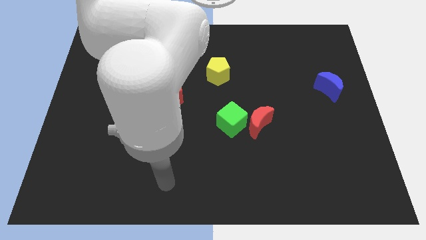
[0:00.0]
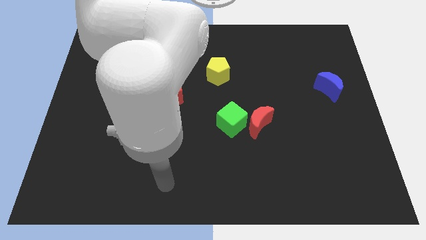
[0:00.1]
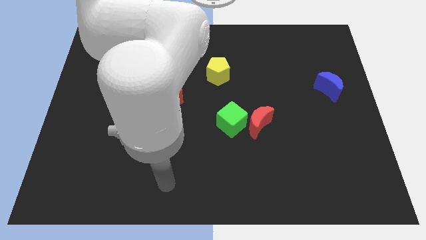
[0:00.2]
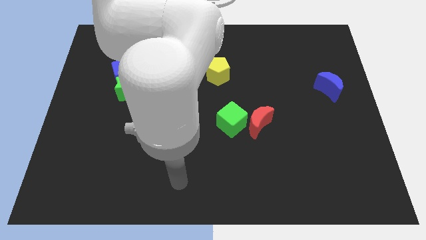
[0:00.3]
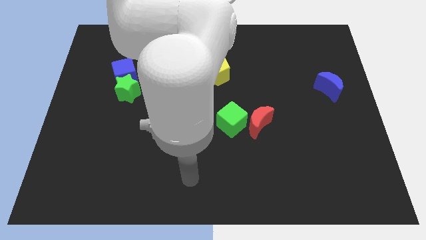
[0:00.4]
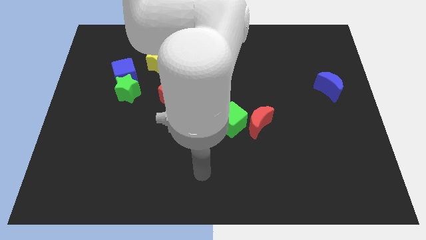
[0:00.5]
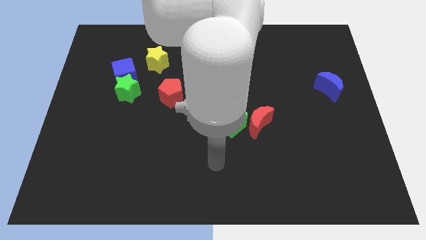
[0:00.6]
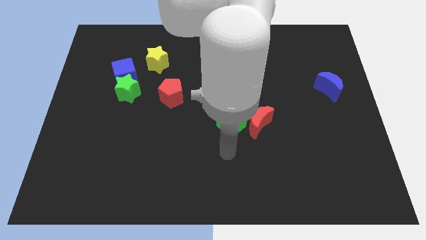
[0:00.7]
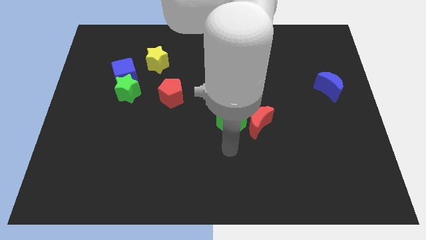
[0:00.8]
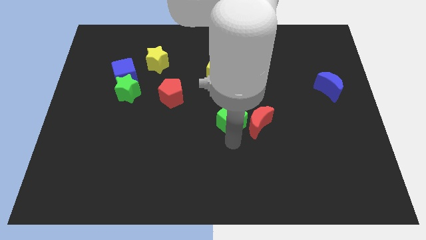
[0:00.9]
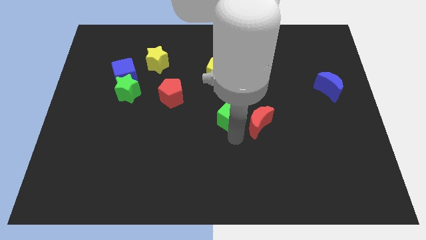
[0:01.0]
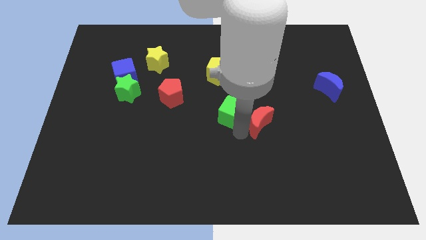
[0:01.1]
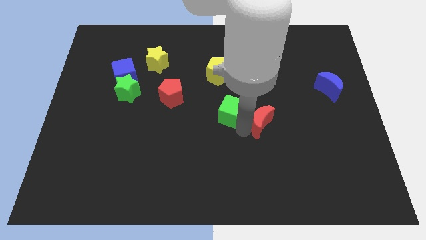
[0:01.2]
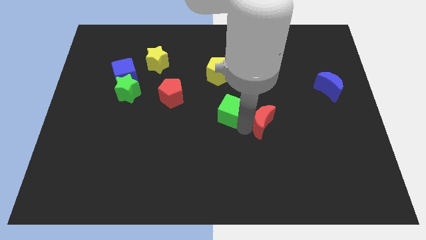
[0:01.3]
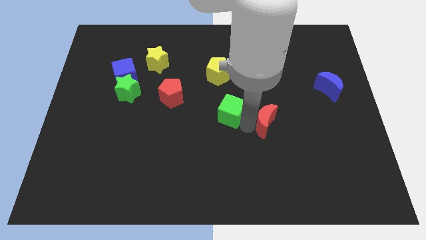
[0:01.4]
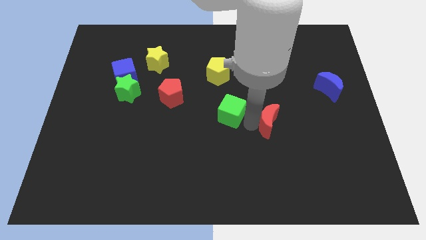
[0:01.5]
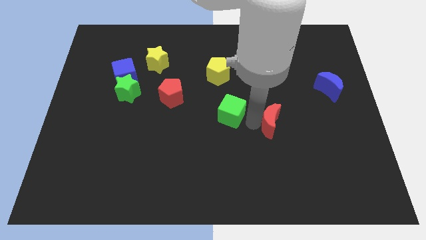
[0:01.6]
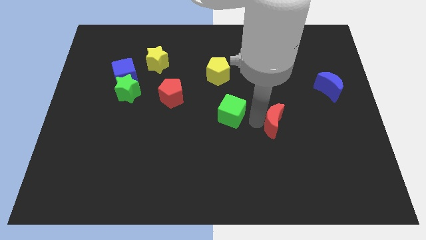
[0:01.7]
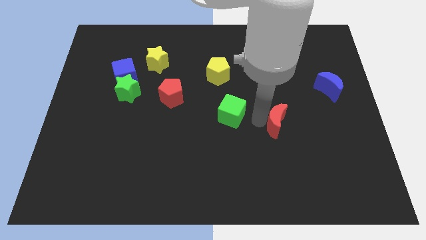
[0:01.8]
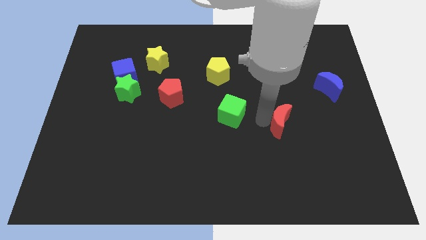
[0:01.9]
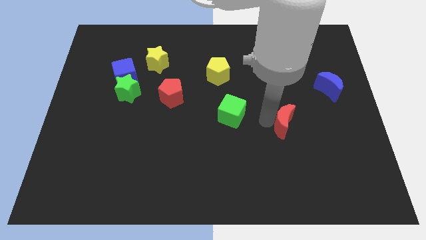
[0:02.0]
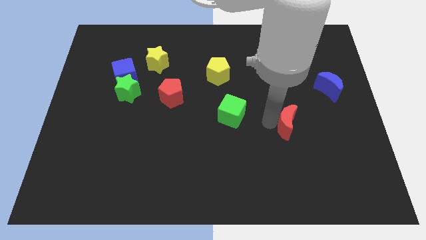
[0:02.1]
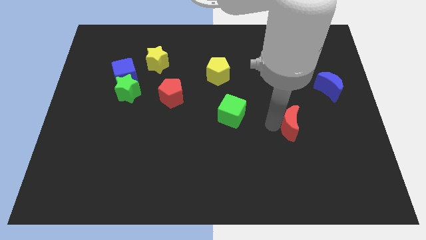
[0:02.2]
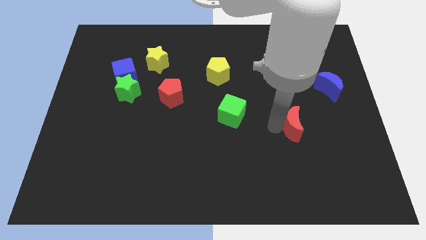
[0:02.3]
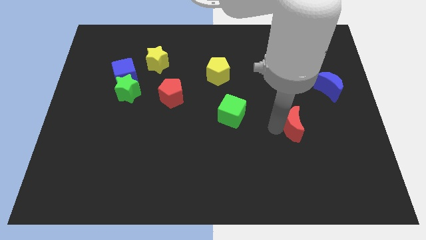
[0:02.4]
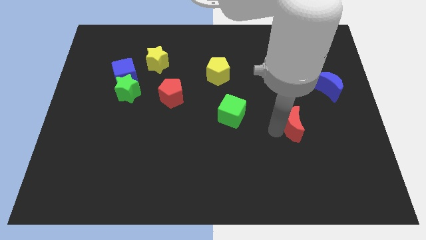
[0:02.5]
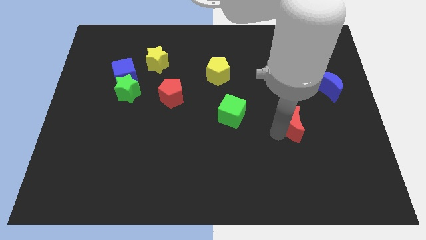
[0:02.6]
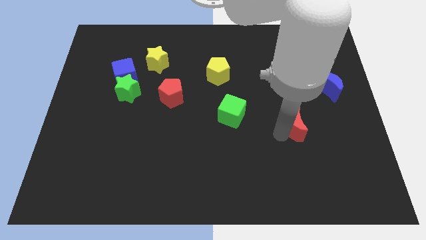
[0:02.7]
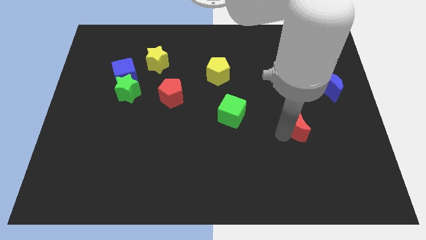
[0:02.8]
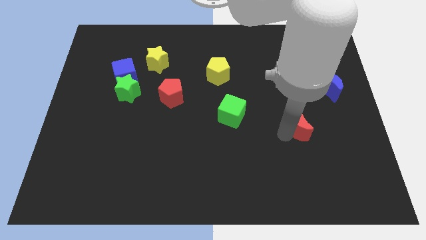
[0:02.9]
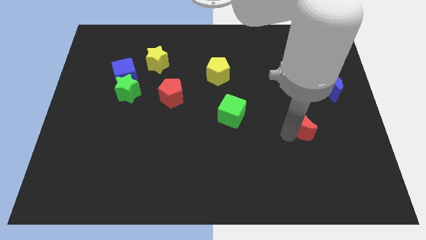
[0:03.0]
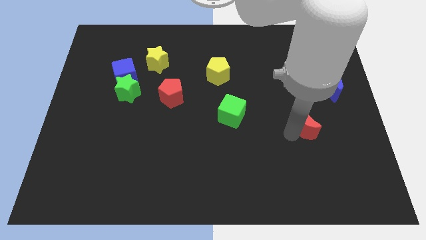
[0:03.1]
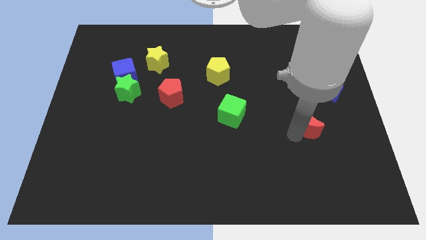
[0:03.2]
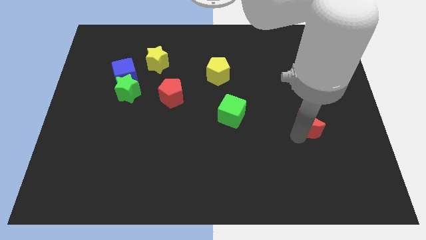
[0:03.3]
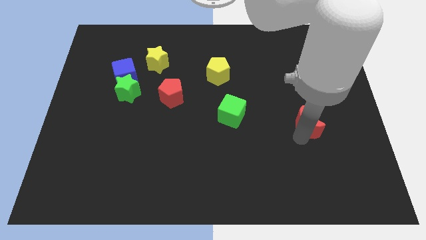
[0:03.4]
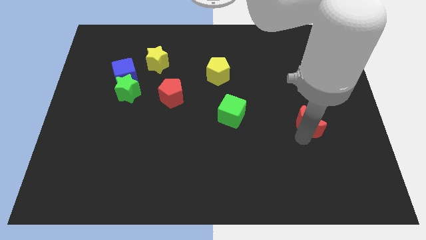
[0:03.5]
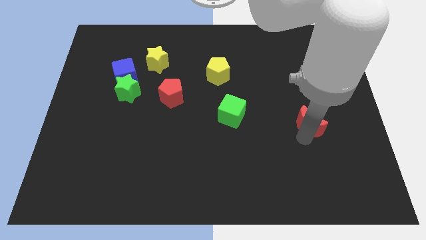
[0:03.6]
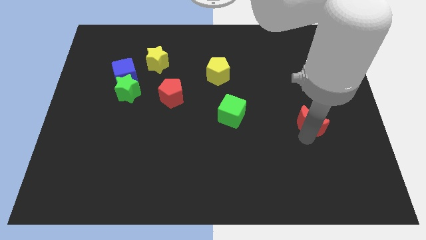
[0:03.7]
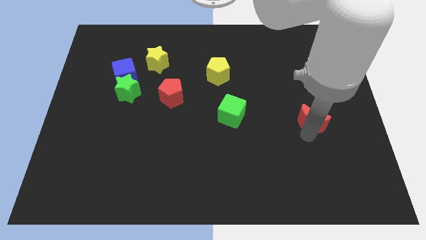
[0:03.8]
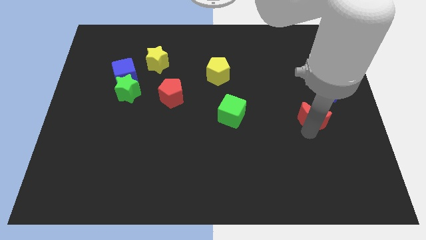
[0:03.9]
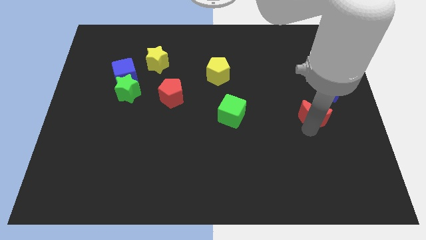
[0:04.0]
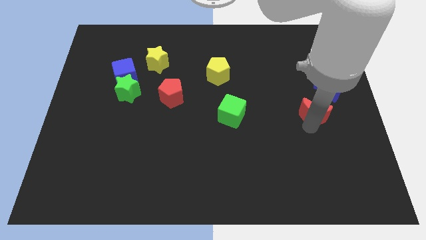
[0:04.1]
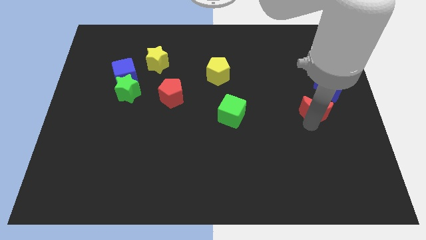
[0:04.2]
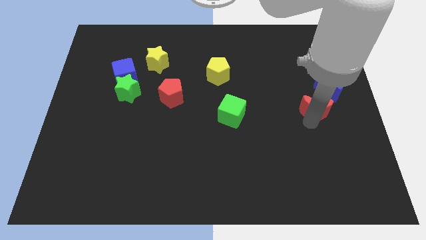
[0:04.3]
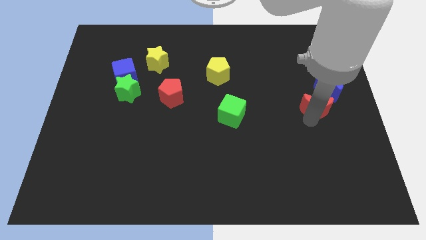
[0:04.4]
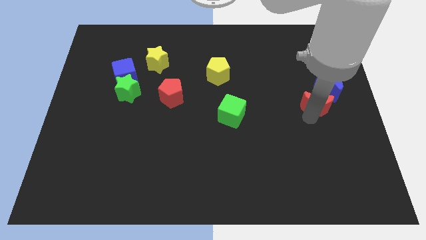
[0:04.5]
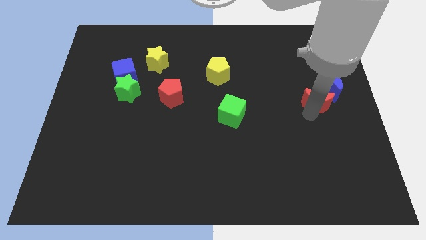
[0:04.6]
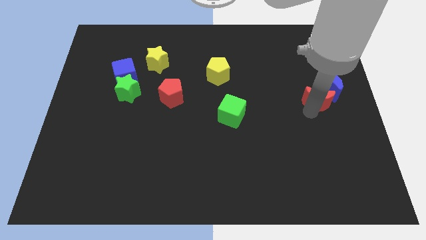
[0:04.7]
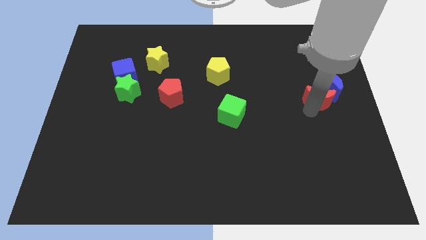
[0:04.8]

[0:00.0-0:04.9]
slide the red moon towards the blue moon

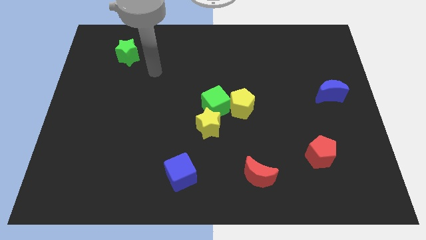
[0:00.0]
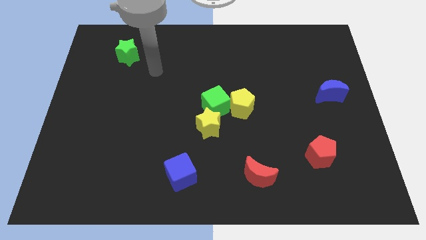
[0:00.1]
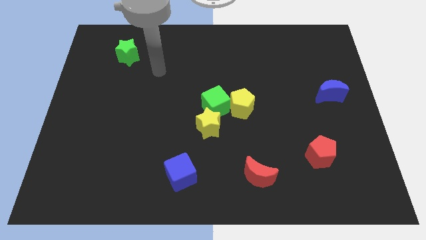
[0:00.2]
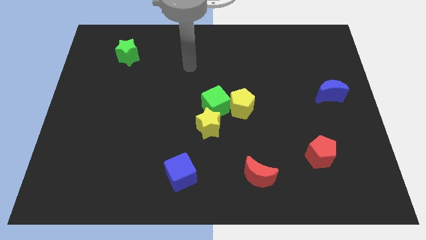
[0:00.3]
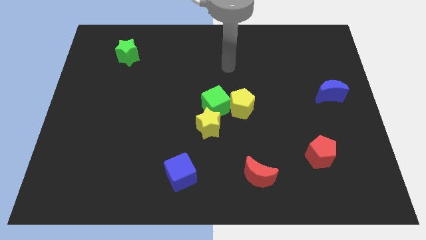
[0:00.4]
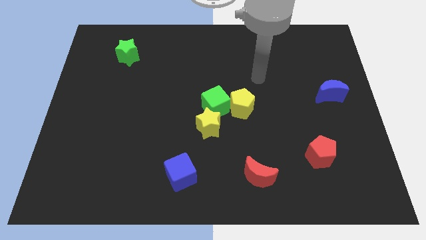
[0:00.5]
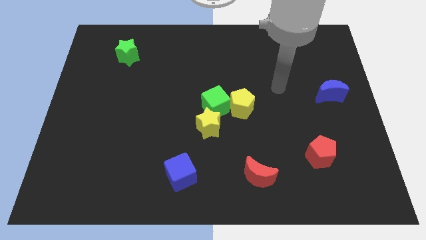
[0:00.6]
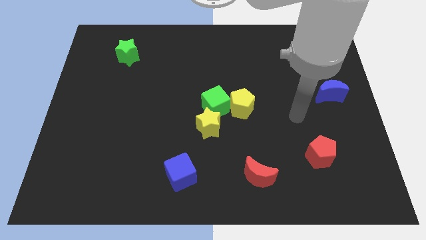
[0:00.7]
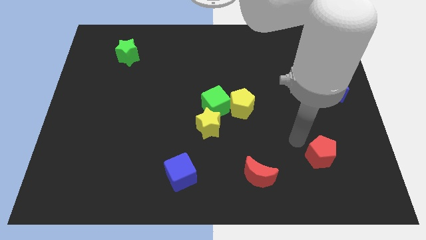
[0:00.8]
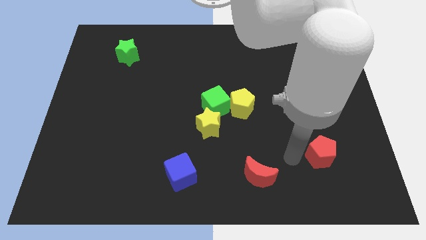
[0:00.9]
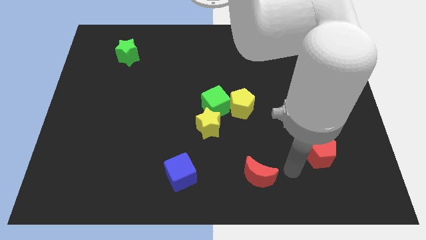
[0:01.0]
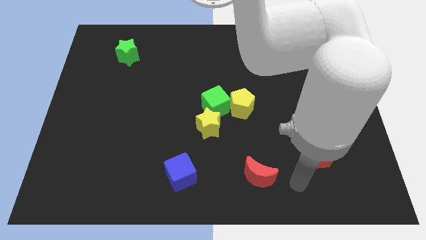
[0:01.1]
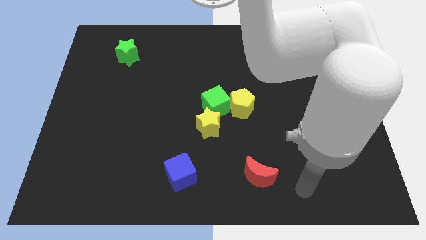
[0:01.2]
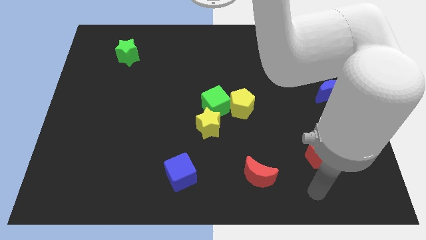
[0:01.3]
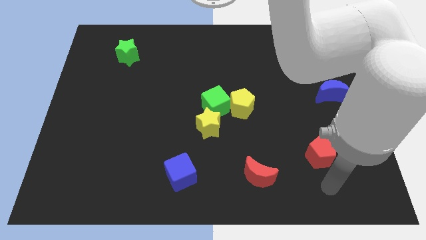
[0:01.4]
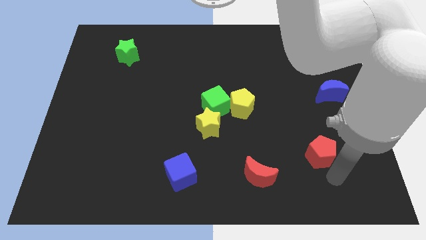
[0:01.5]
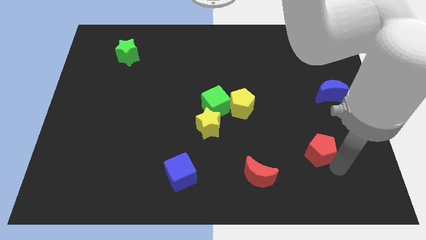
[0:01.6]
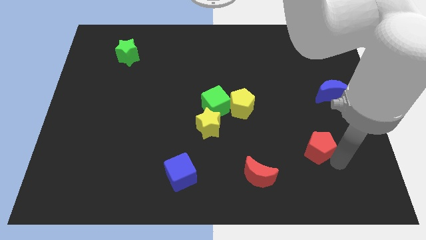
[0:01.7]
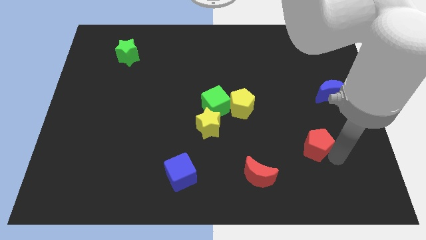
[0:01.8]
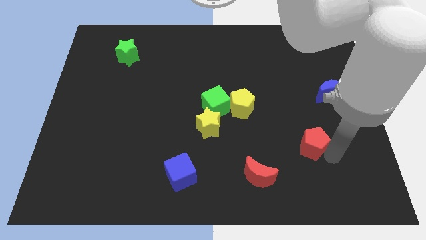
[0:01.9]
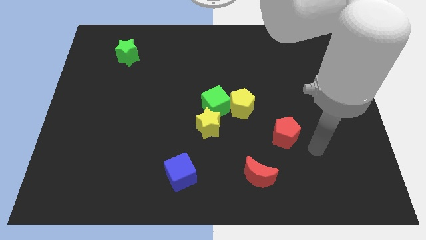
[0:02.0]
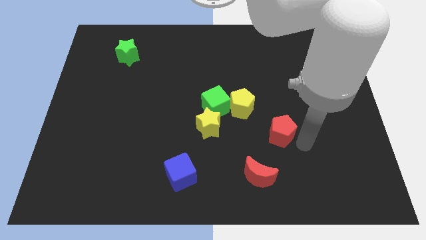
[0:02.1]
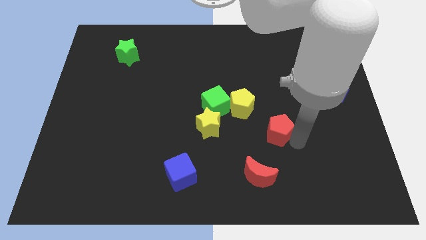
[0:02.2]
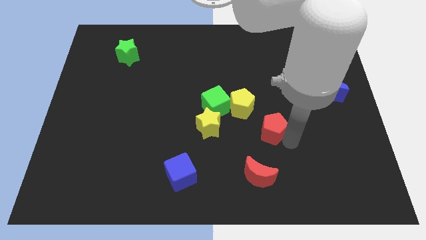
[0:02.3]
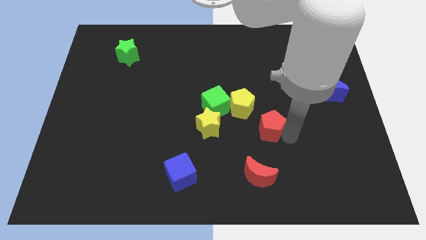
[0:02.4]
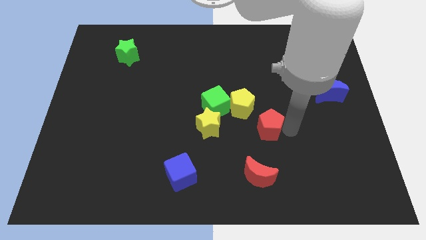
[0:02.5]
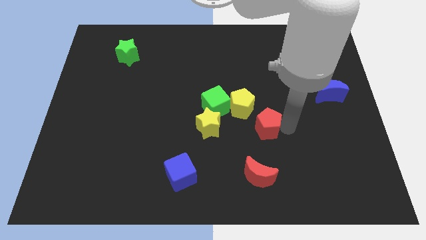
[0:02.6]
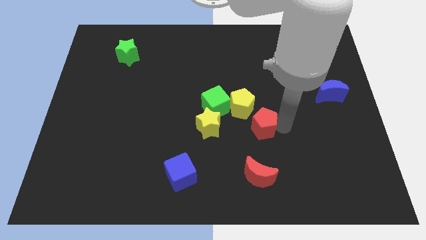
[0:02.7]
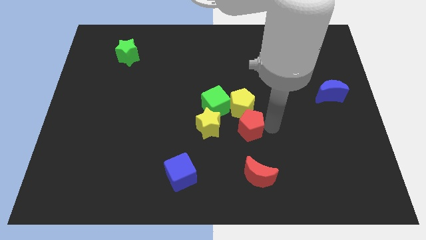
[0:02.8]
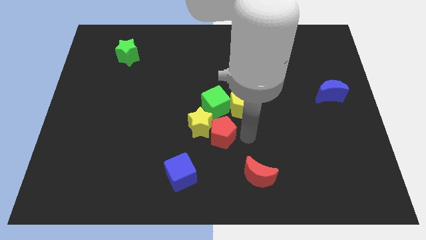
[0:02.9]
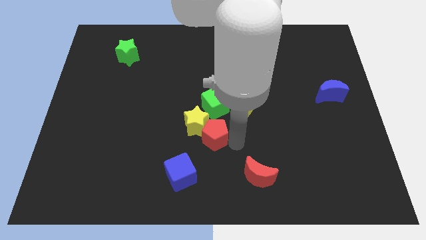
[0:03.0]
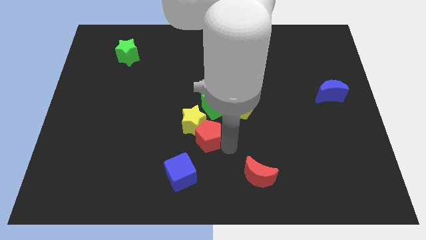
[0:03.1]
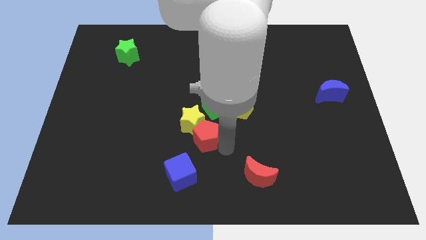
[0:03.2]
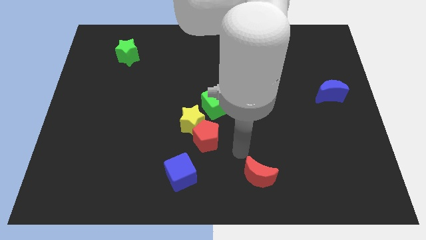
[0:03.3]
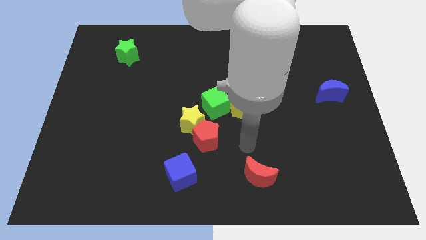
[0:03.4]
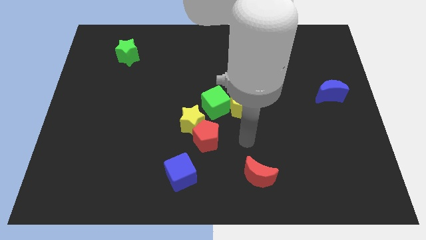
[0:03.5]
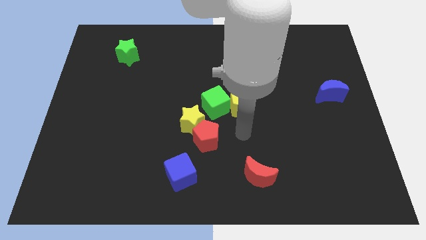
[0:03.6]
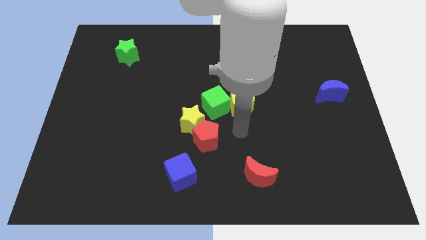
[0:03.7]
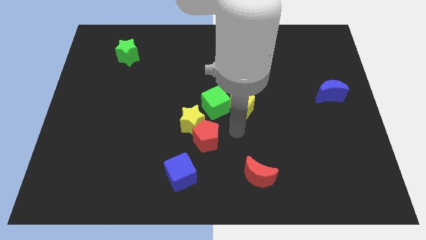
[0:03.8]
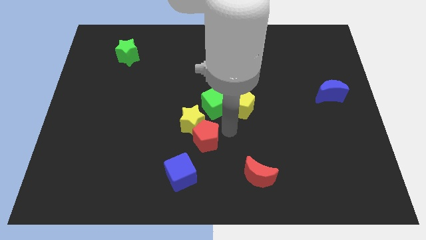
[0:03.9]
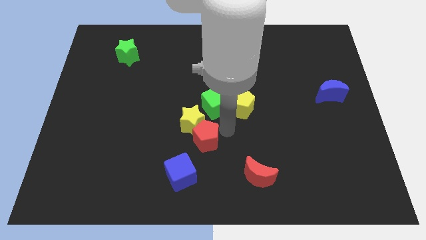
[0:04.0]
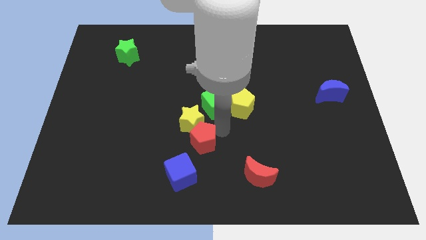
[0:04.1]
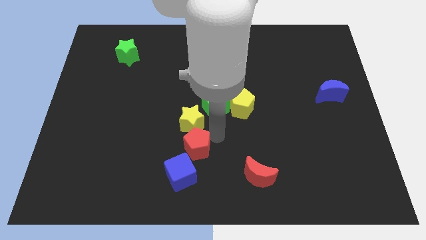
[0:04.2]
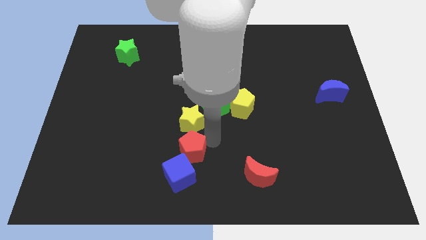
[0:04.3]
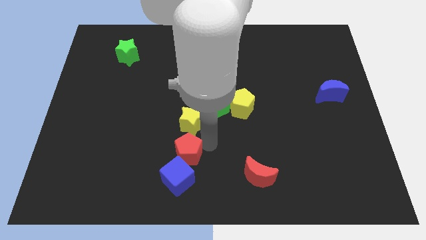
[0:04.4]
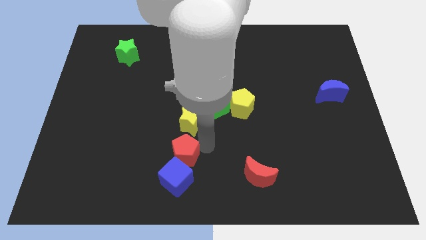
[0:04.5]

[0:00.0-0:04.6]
put the red pentagon next to the blue cube
